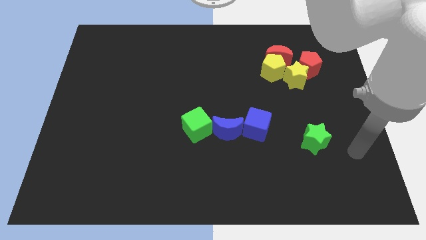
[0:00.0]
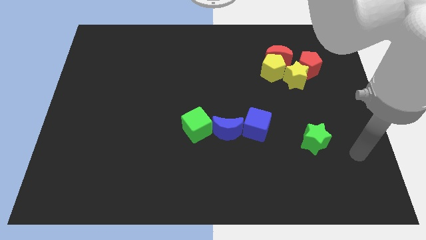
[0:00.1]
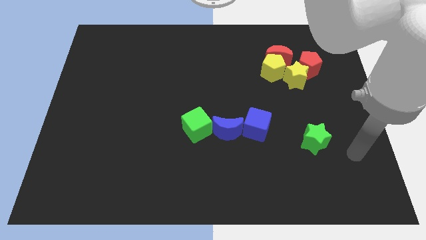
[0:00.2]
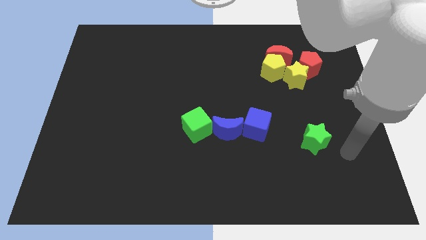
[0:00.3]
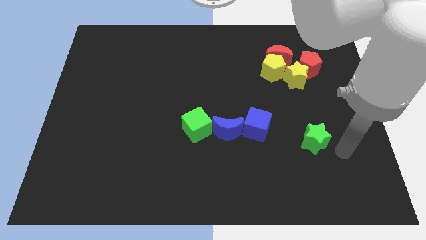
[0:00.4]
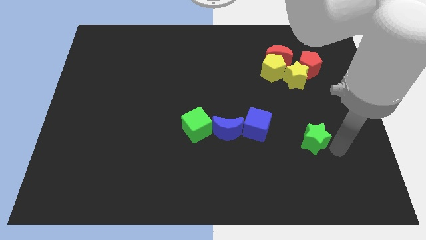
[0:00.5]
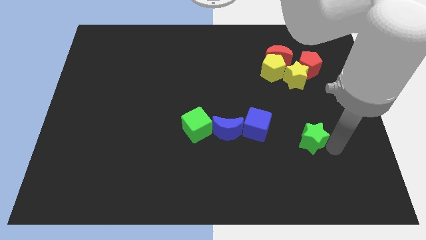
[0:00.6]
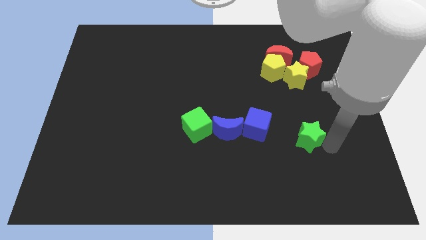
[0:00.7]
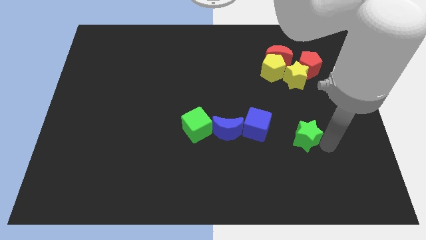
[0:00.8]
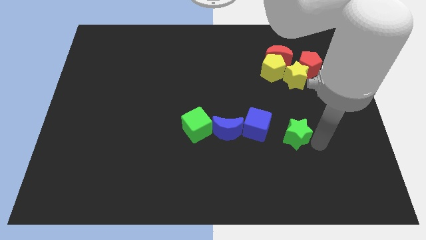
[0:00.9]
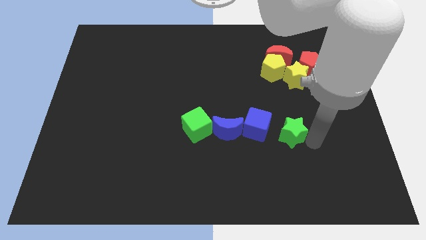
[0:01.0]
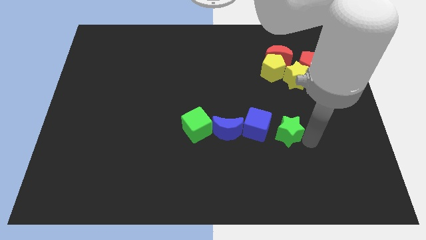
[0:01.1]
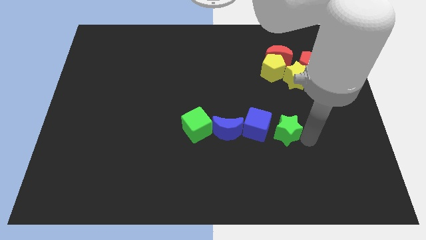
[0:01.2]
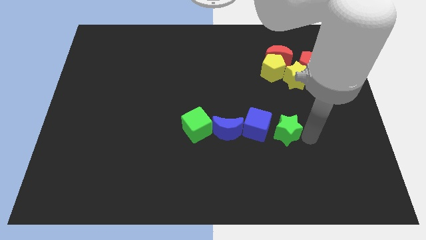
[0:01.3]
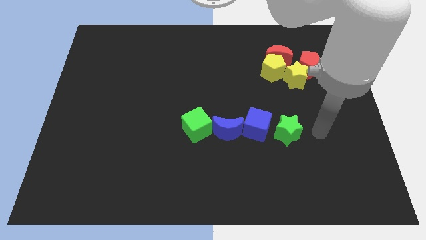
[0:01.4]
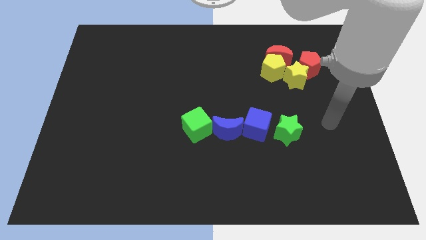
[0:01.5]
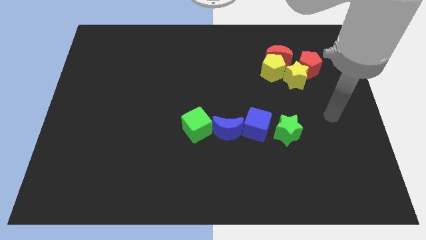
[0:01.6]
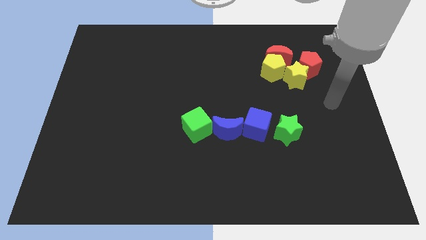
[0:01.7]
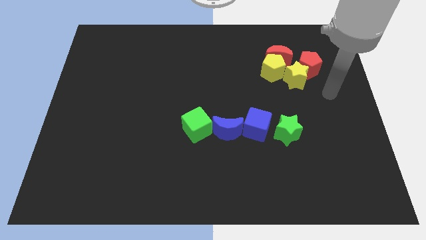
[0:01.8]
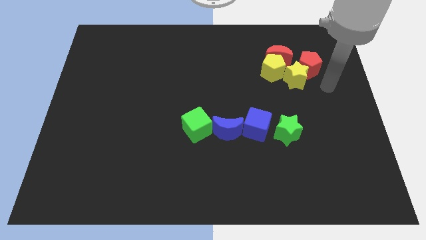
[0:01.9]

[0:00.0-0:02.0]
place the green star to the right of the blue cube

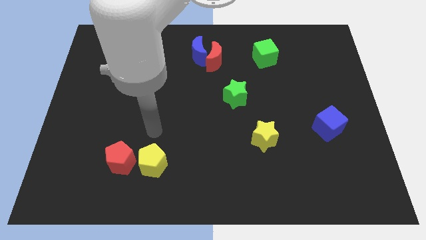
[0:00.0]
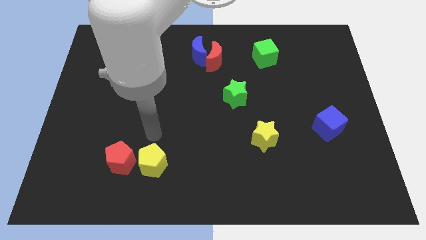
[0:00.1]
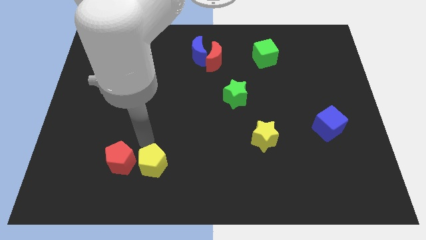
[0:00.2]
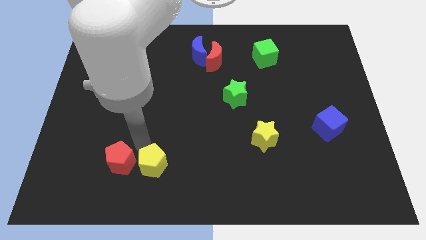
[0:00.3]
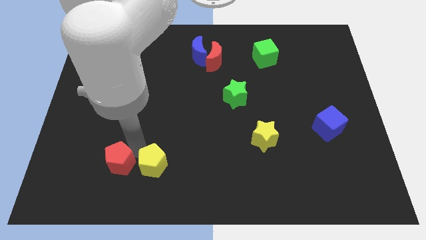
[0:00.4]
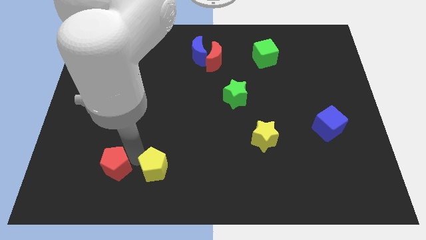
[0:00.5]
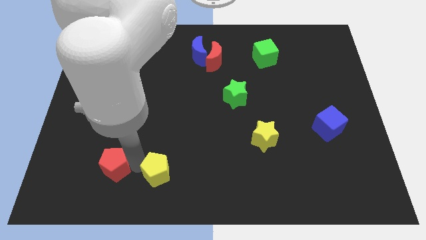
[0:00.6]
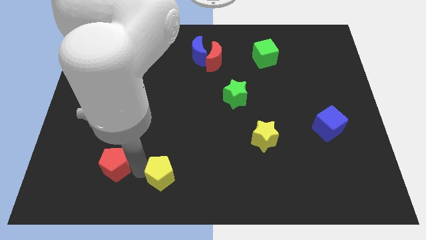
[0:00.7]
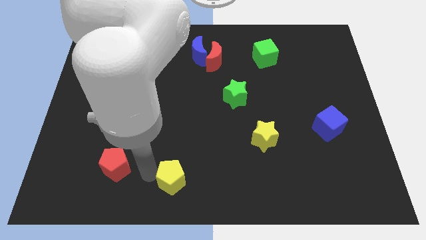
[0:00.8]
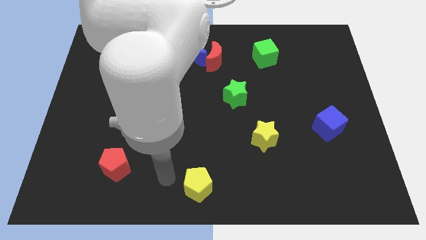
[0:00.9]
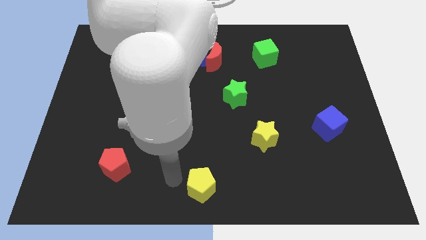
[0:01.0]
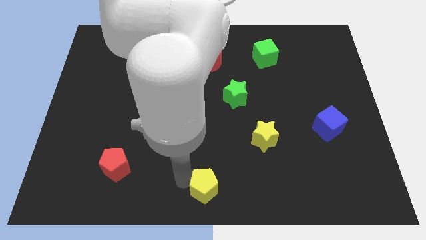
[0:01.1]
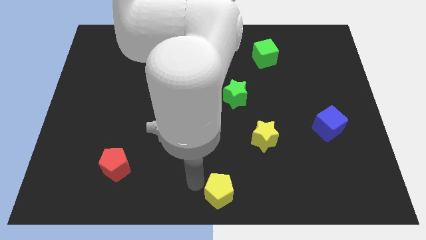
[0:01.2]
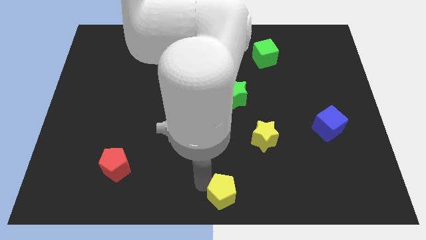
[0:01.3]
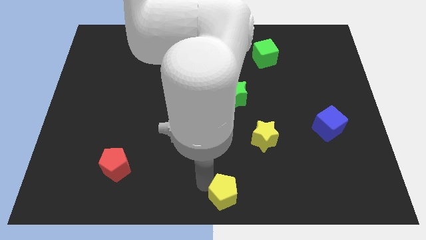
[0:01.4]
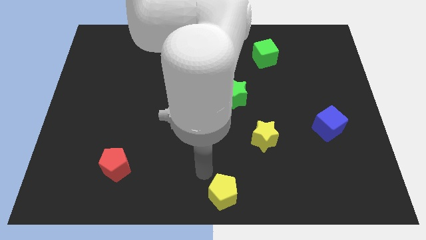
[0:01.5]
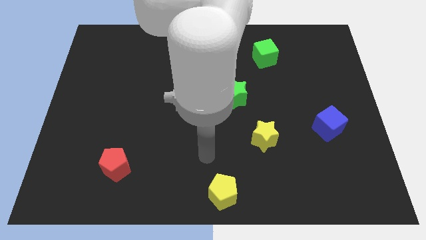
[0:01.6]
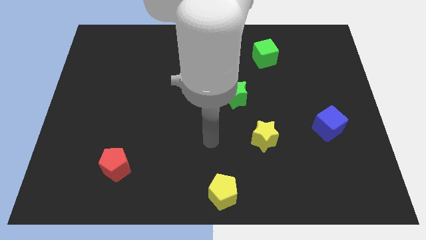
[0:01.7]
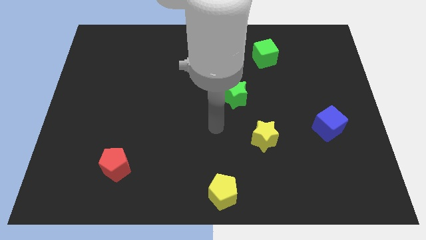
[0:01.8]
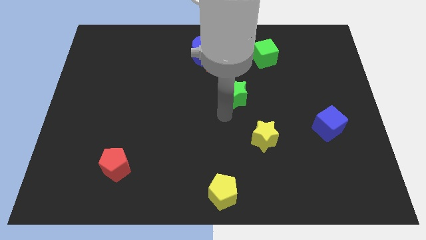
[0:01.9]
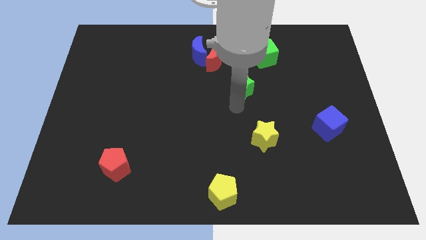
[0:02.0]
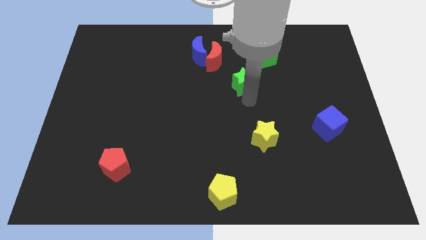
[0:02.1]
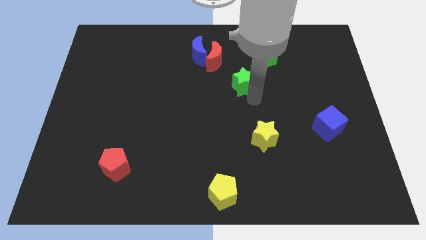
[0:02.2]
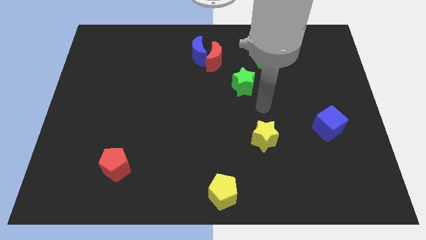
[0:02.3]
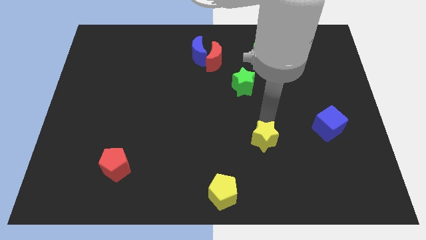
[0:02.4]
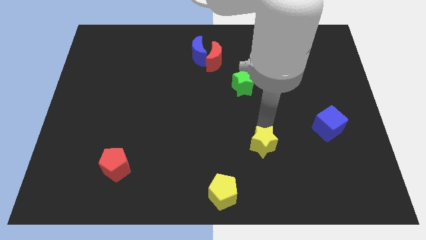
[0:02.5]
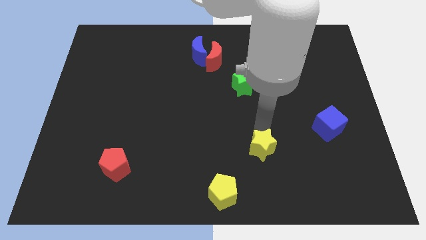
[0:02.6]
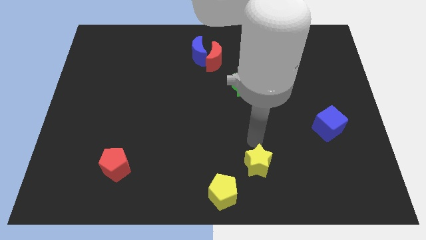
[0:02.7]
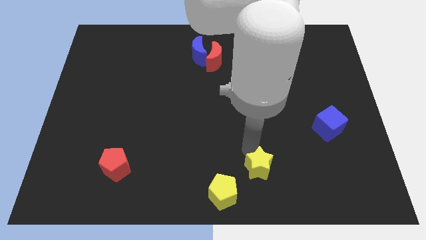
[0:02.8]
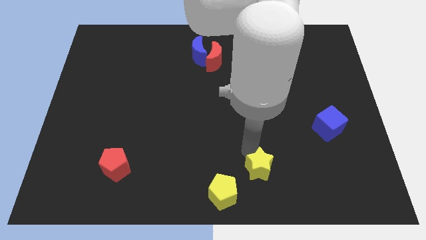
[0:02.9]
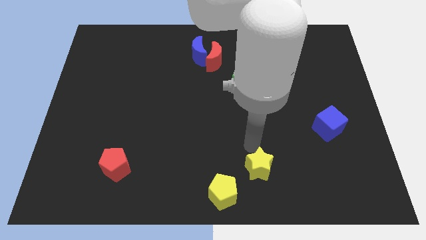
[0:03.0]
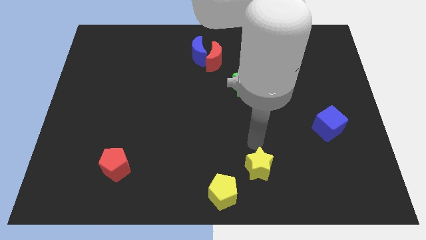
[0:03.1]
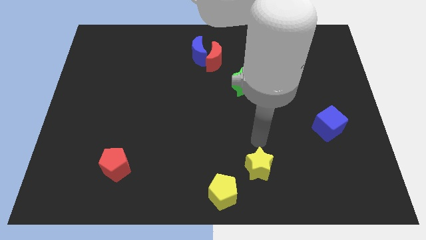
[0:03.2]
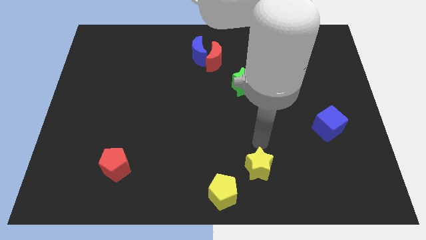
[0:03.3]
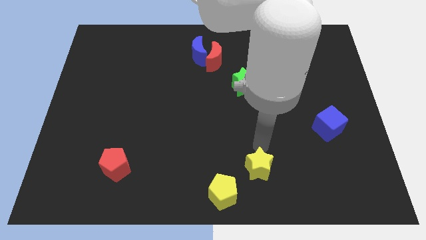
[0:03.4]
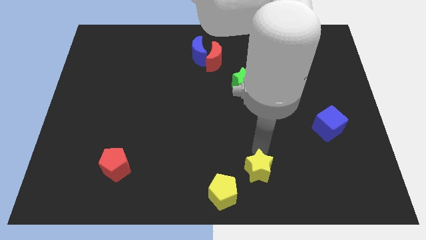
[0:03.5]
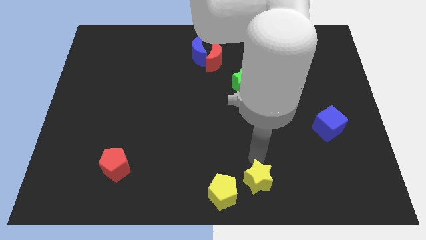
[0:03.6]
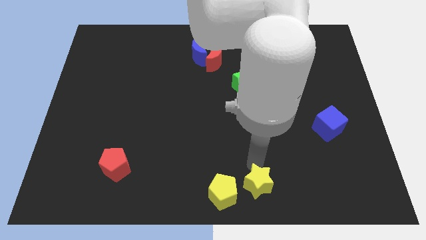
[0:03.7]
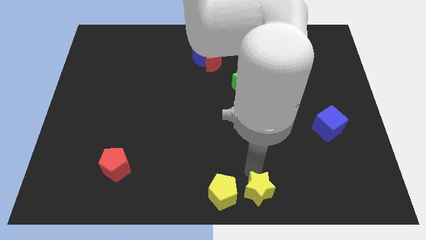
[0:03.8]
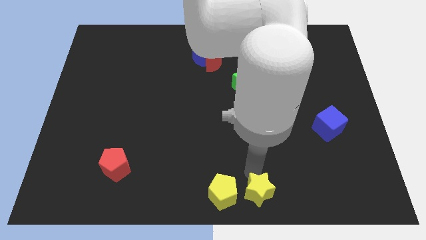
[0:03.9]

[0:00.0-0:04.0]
push the yellow pentagon and the yellow star to the bottom center of the board

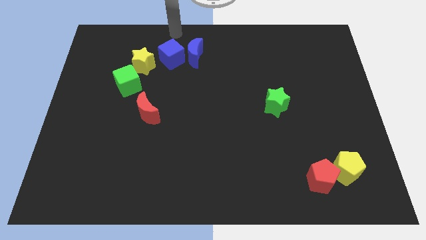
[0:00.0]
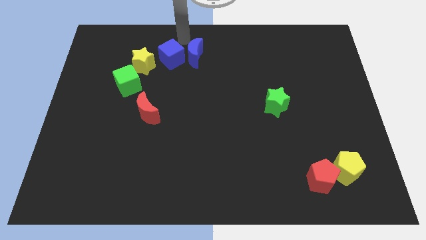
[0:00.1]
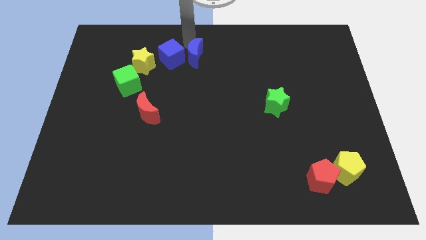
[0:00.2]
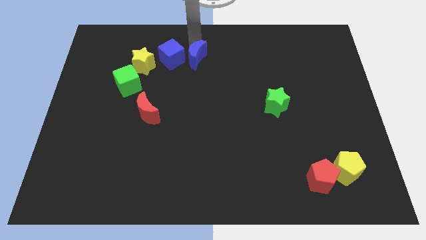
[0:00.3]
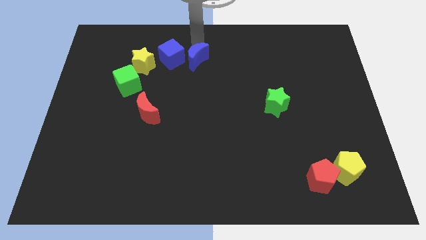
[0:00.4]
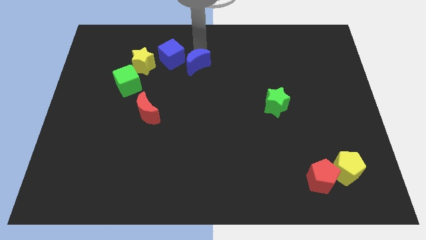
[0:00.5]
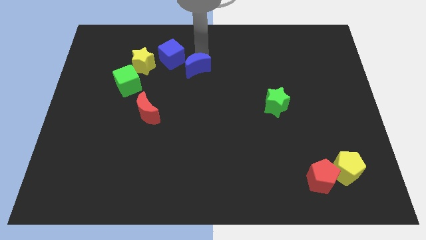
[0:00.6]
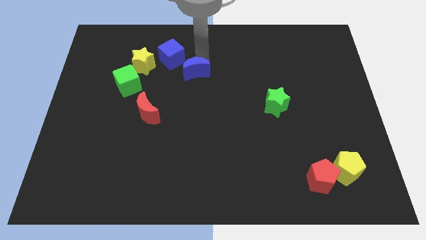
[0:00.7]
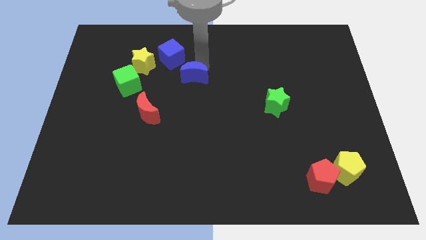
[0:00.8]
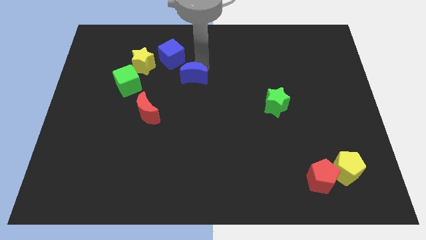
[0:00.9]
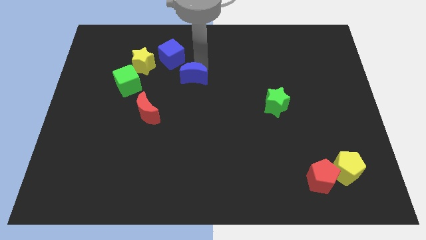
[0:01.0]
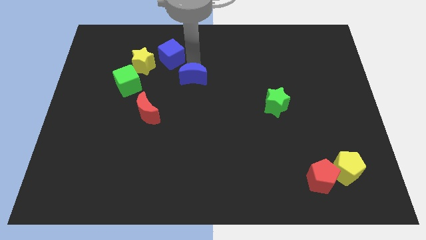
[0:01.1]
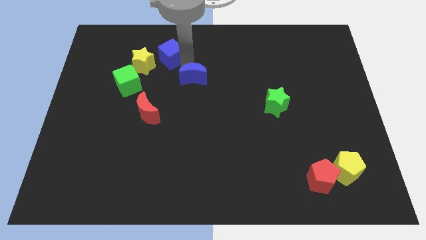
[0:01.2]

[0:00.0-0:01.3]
push the blue crescent to the right of the green cube

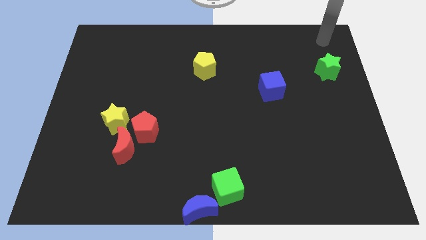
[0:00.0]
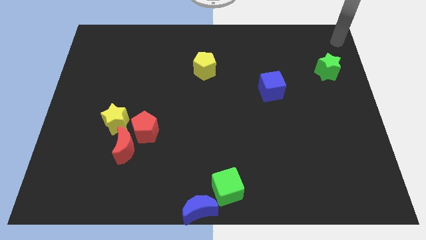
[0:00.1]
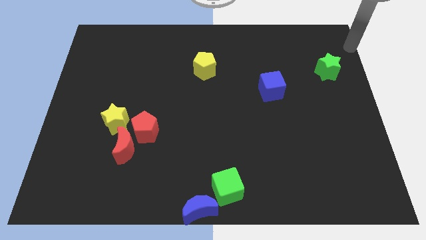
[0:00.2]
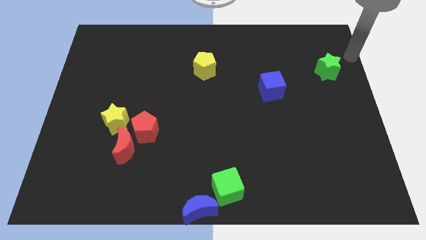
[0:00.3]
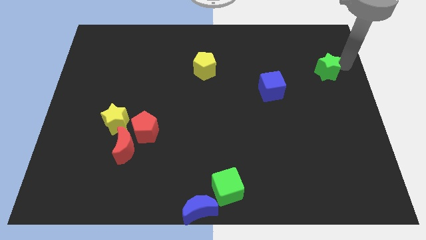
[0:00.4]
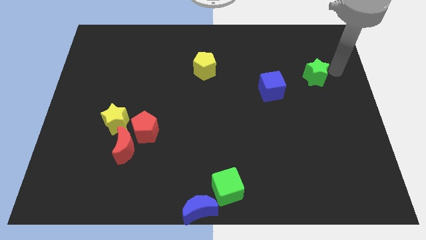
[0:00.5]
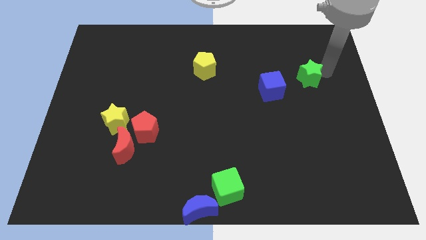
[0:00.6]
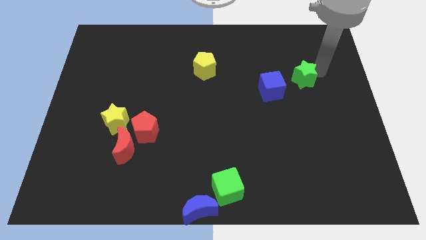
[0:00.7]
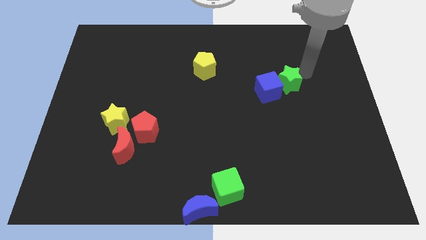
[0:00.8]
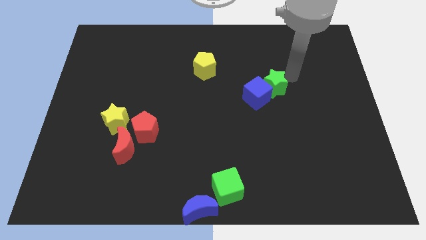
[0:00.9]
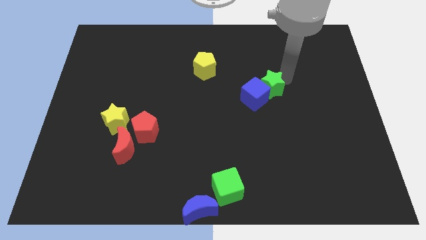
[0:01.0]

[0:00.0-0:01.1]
push the green star into blue cube

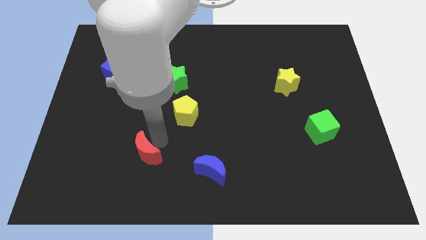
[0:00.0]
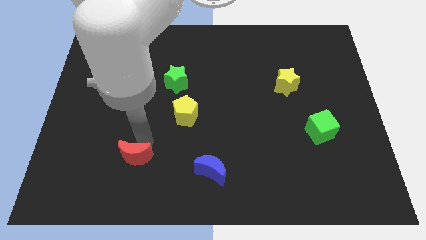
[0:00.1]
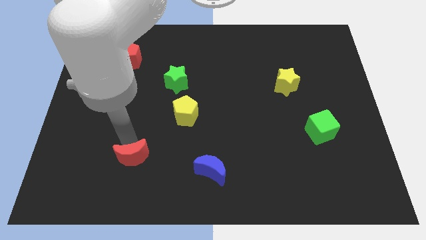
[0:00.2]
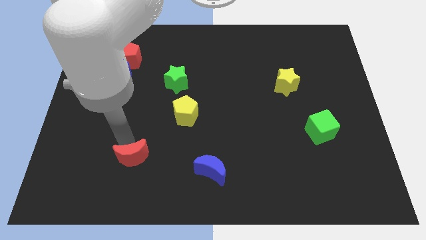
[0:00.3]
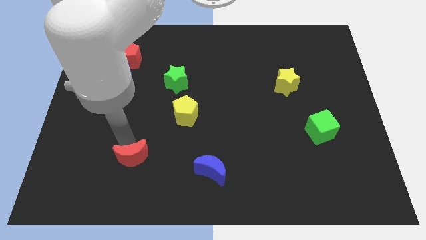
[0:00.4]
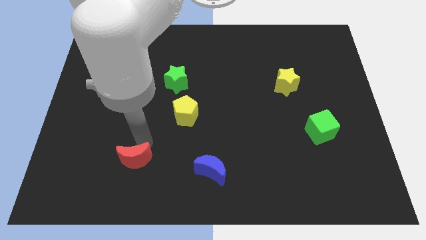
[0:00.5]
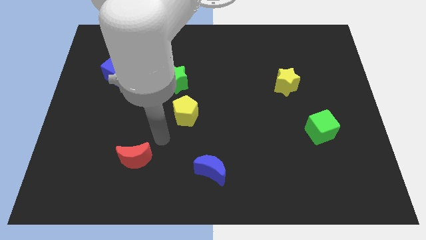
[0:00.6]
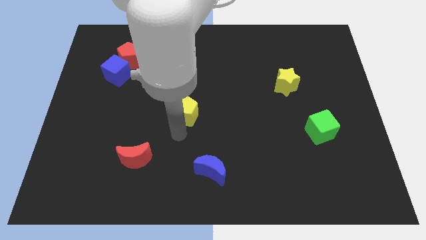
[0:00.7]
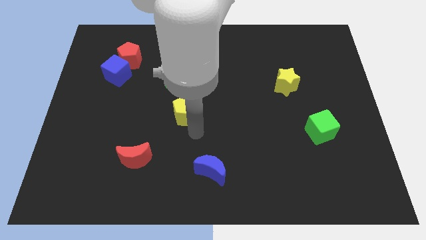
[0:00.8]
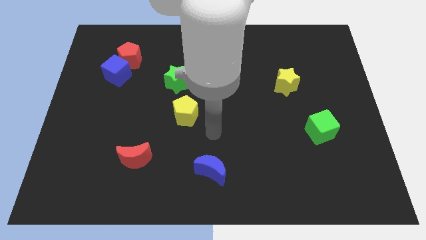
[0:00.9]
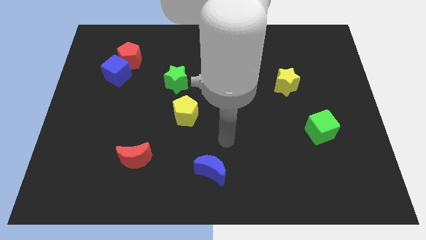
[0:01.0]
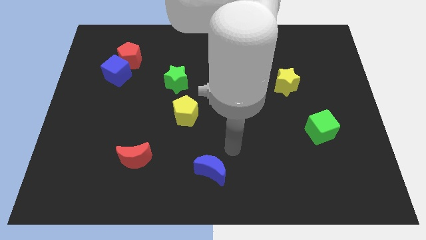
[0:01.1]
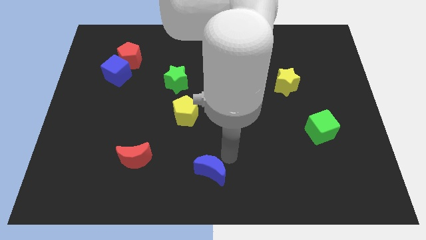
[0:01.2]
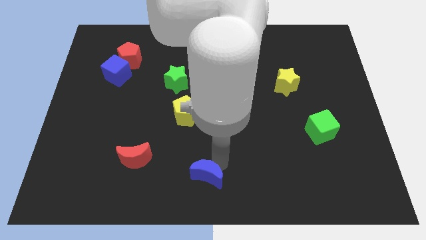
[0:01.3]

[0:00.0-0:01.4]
place the red moon slightly to the left
